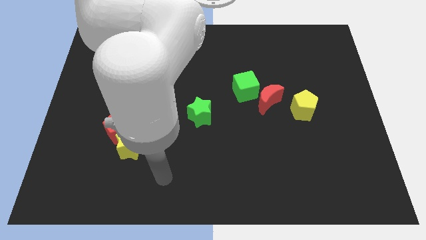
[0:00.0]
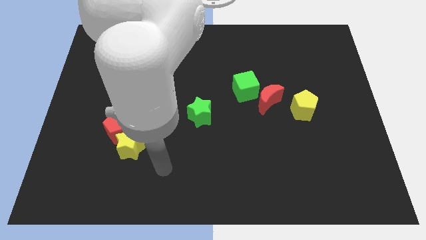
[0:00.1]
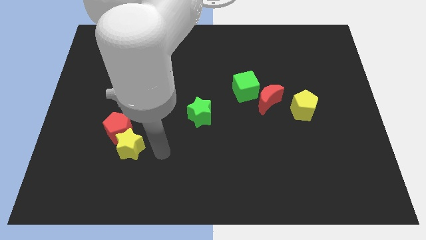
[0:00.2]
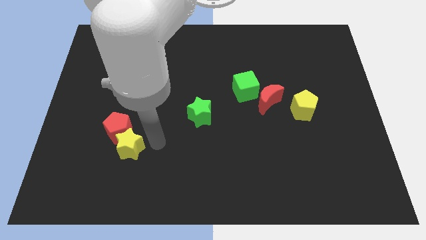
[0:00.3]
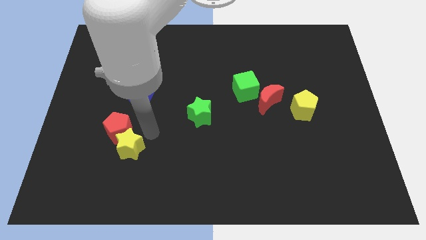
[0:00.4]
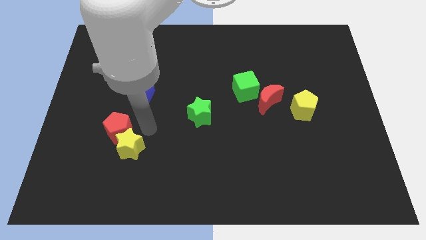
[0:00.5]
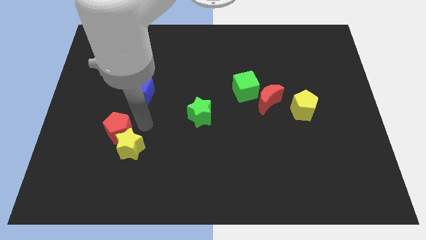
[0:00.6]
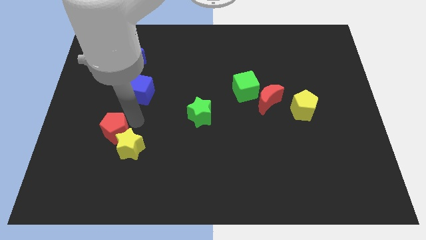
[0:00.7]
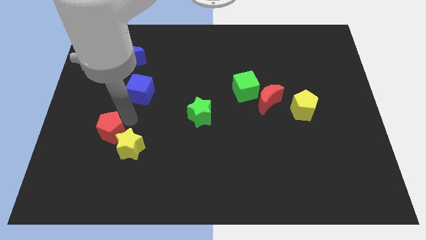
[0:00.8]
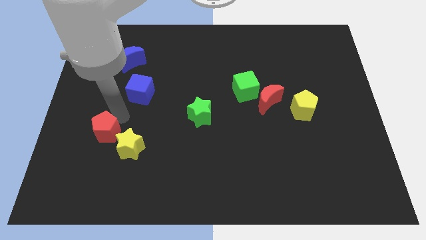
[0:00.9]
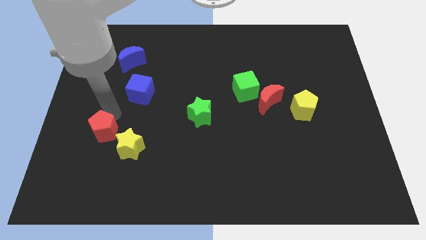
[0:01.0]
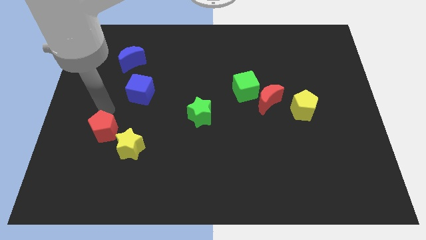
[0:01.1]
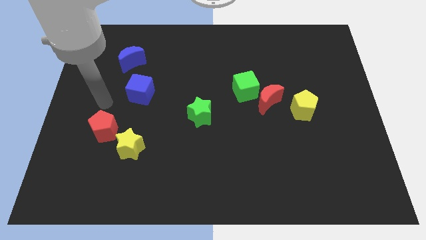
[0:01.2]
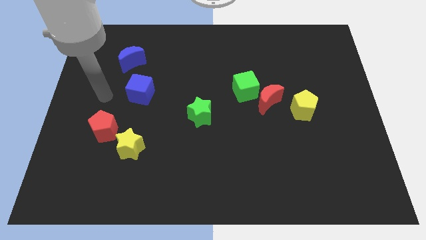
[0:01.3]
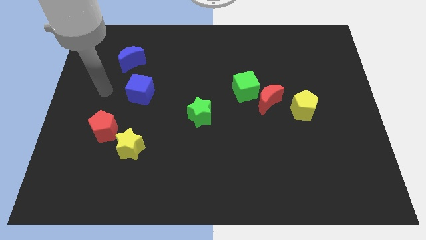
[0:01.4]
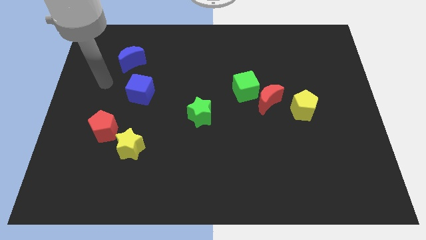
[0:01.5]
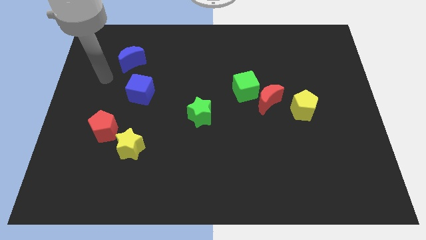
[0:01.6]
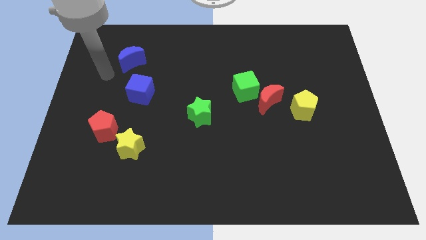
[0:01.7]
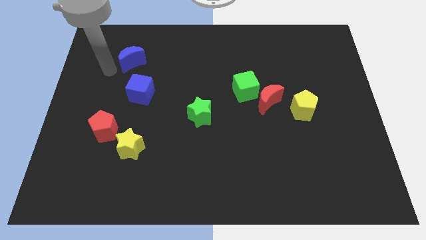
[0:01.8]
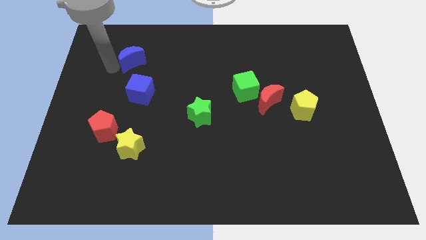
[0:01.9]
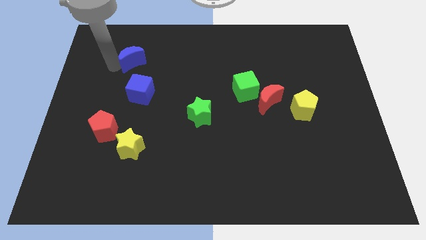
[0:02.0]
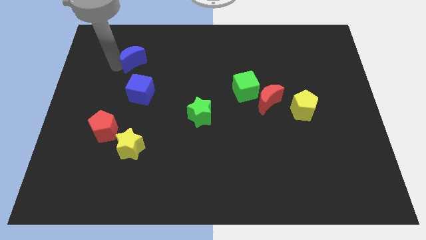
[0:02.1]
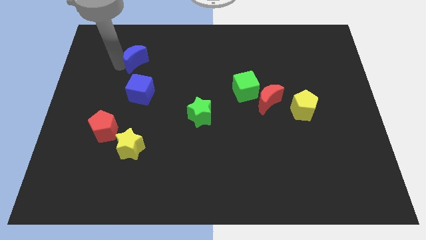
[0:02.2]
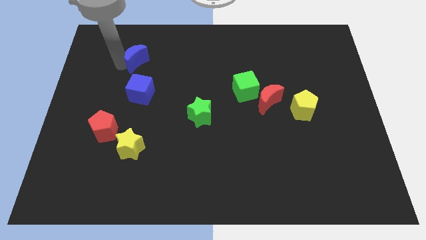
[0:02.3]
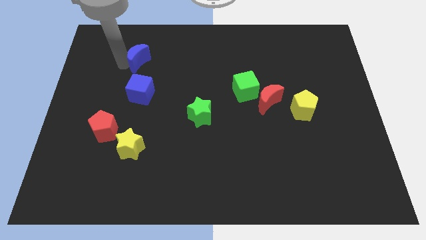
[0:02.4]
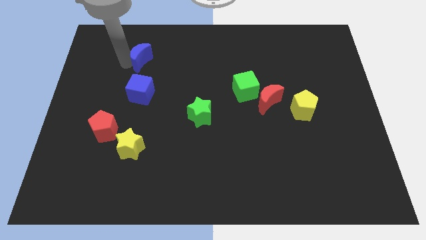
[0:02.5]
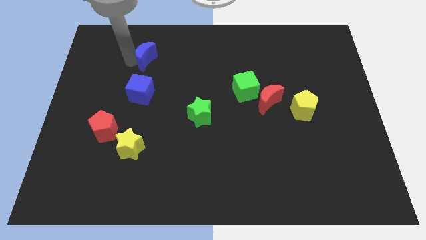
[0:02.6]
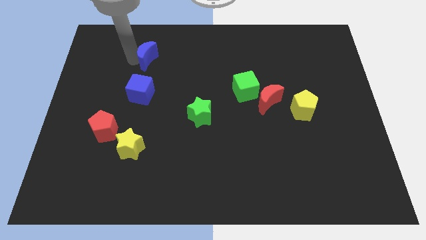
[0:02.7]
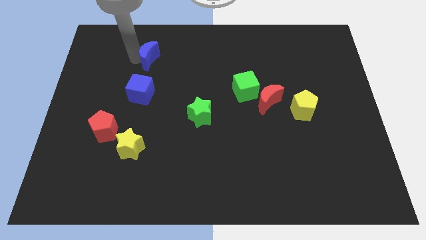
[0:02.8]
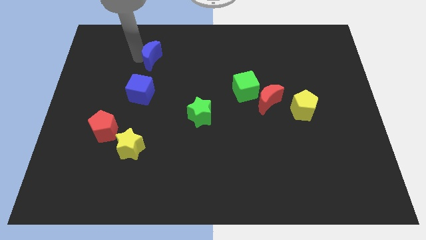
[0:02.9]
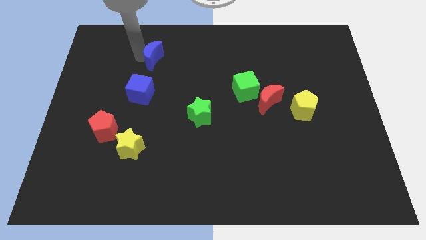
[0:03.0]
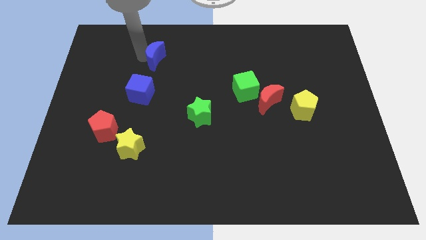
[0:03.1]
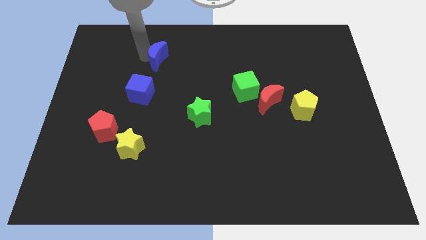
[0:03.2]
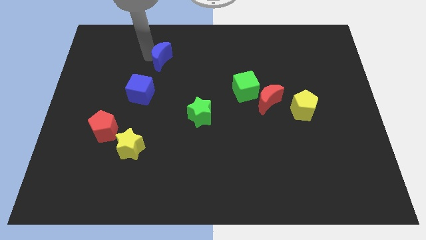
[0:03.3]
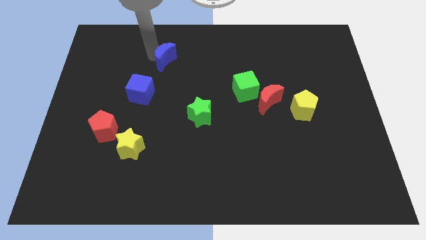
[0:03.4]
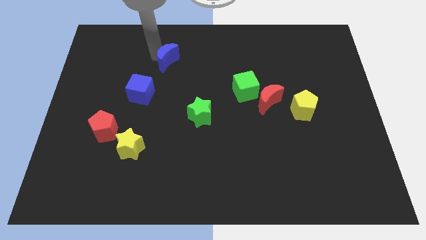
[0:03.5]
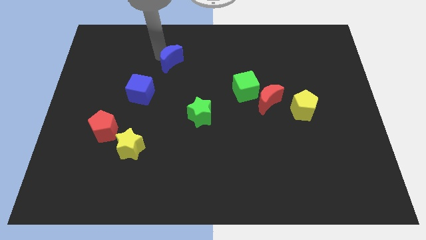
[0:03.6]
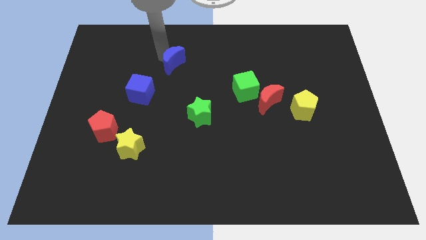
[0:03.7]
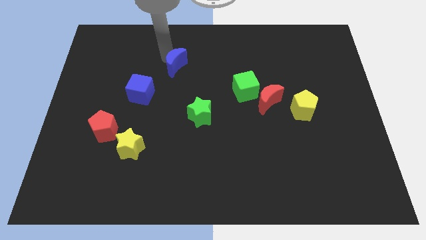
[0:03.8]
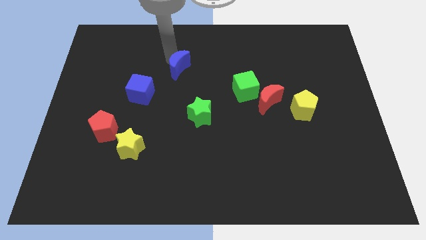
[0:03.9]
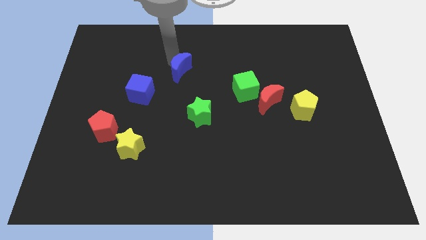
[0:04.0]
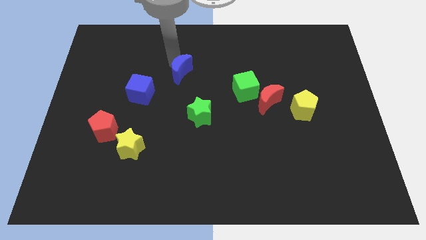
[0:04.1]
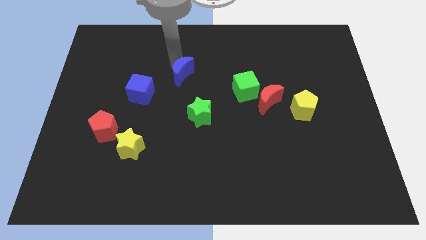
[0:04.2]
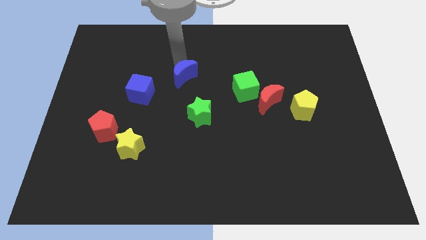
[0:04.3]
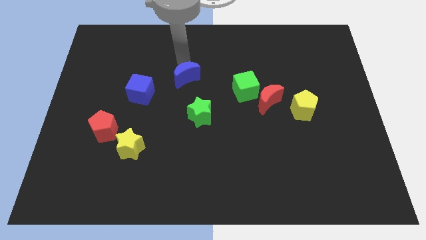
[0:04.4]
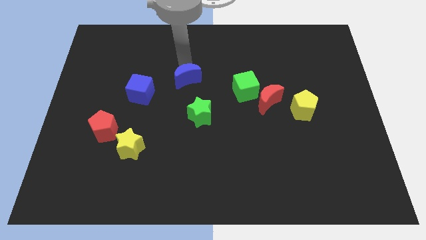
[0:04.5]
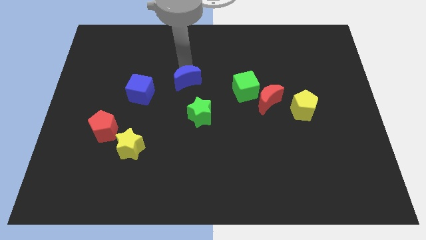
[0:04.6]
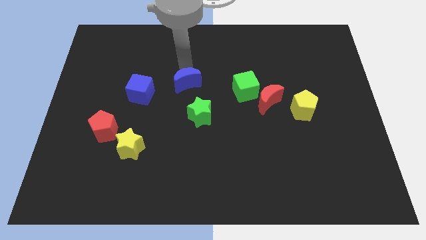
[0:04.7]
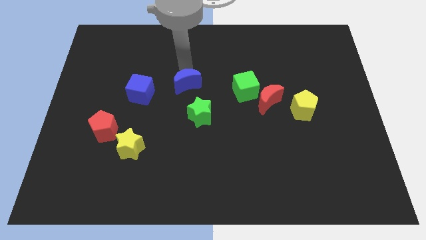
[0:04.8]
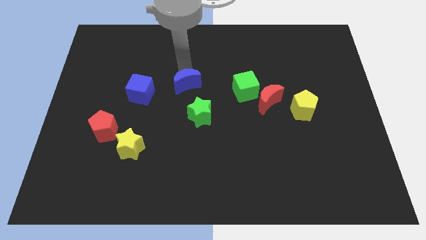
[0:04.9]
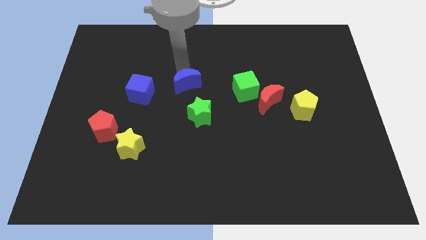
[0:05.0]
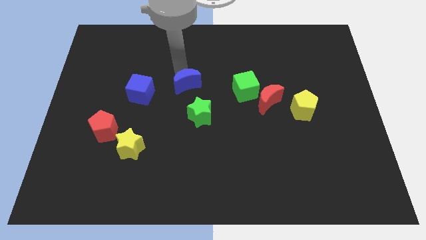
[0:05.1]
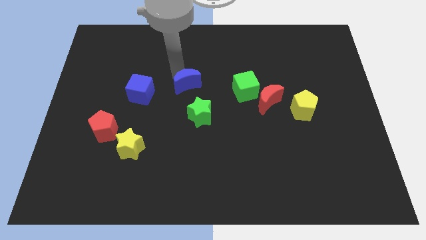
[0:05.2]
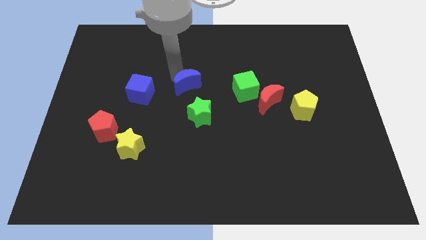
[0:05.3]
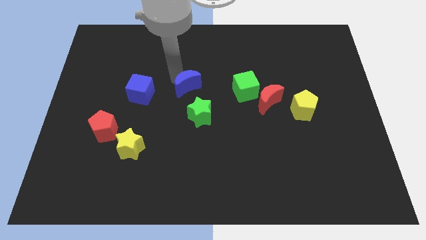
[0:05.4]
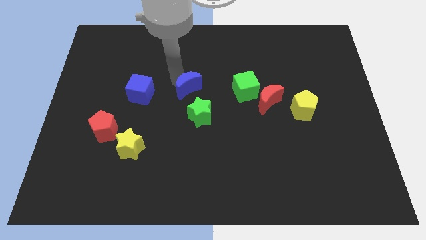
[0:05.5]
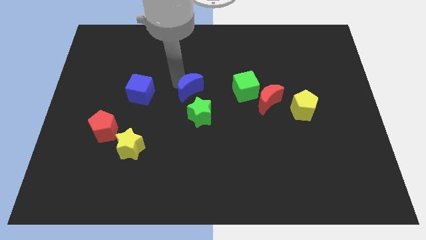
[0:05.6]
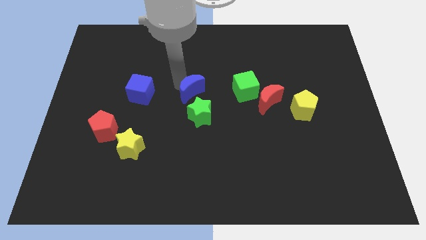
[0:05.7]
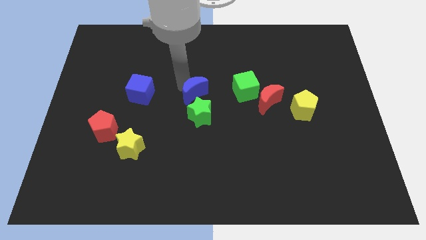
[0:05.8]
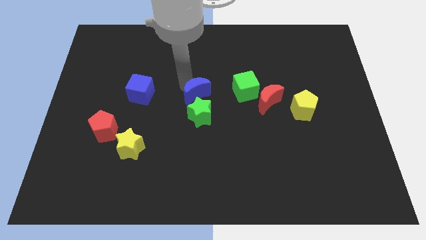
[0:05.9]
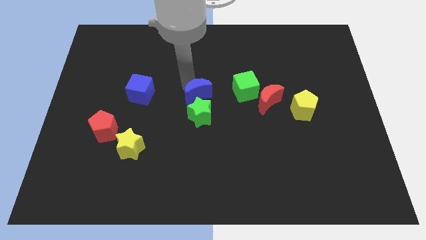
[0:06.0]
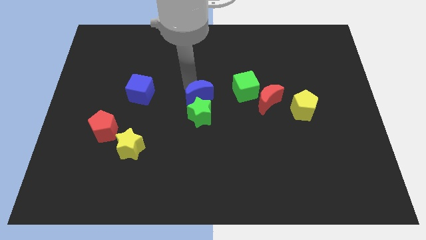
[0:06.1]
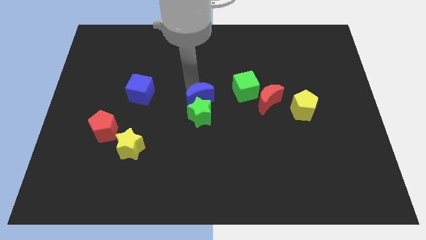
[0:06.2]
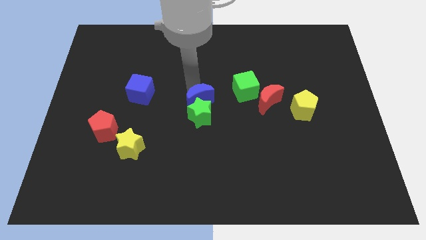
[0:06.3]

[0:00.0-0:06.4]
slide the blue moon to the green star

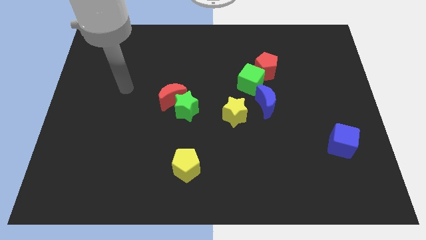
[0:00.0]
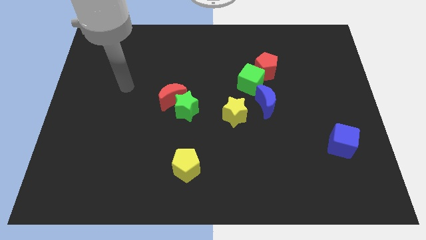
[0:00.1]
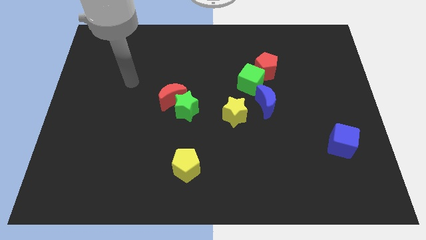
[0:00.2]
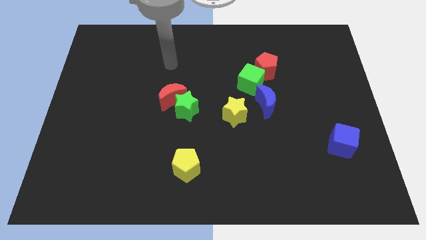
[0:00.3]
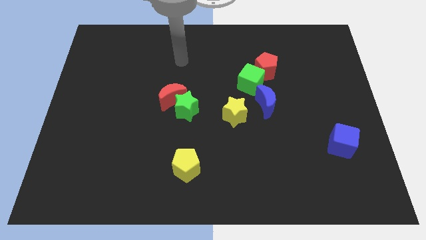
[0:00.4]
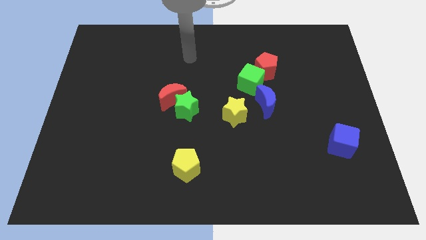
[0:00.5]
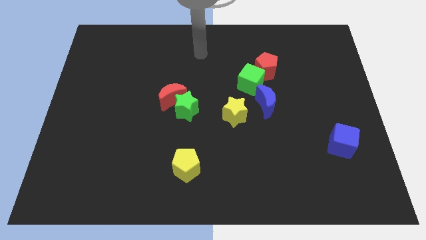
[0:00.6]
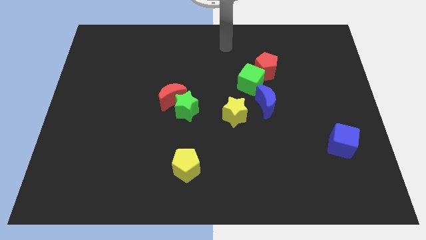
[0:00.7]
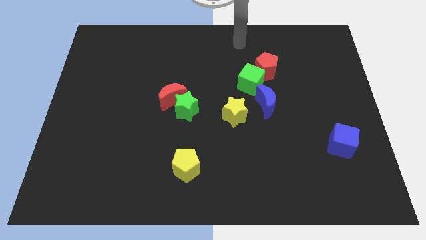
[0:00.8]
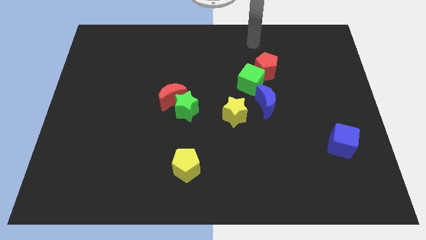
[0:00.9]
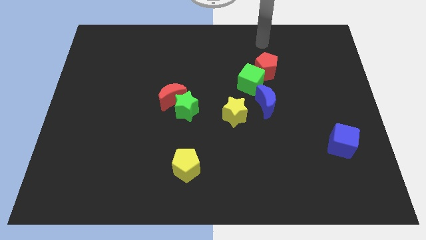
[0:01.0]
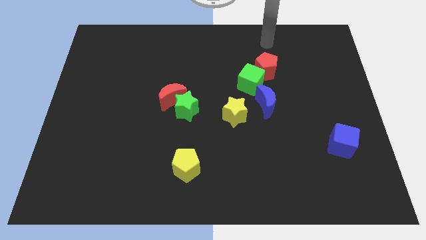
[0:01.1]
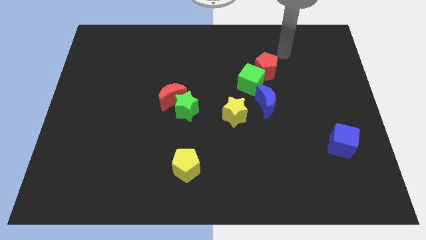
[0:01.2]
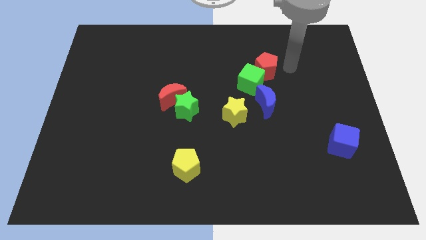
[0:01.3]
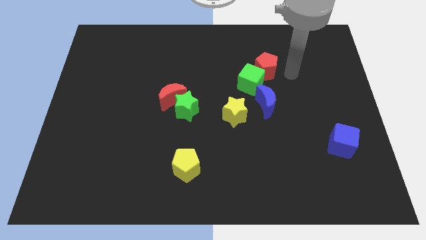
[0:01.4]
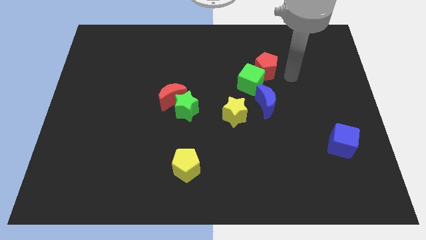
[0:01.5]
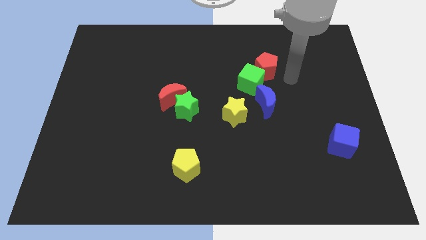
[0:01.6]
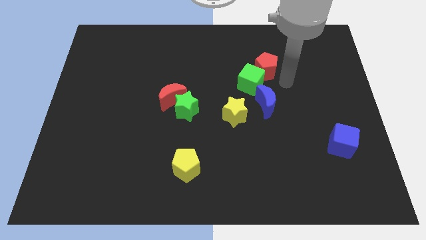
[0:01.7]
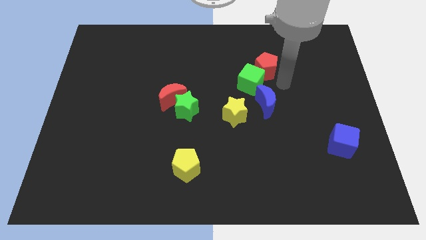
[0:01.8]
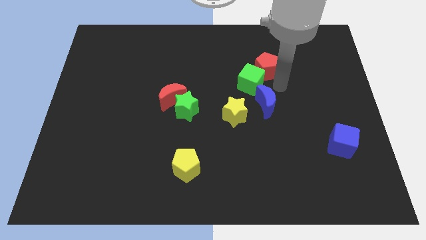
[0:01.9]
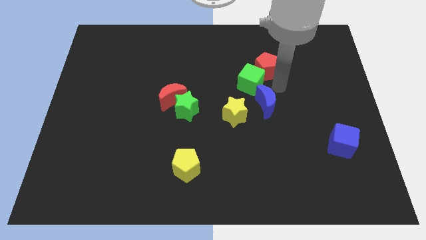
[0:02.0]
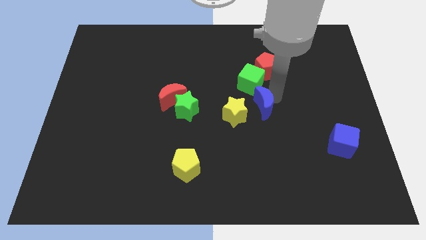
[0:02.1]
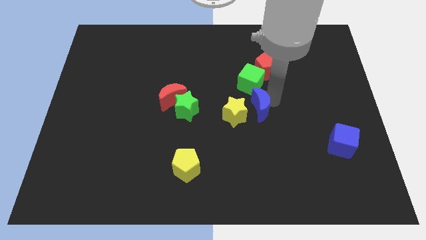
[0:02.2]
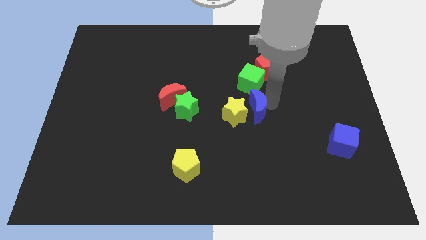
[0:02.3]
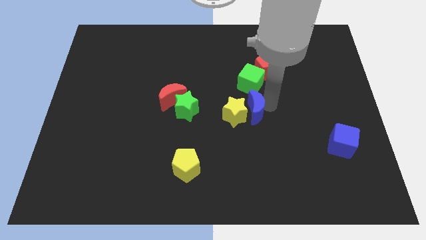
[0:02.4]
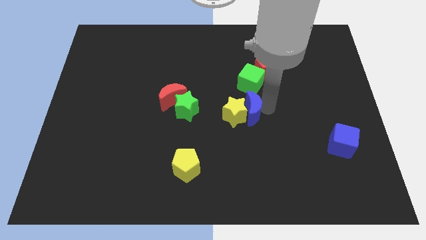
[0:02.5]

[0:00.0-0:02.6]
push the blue moon to the yellow star
